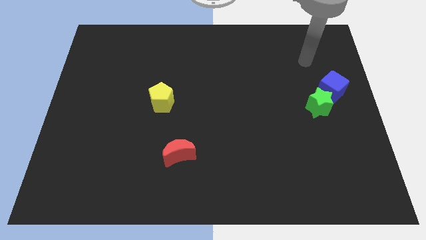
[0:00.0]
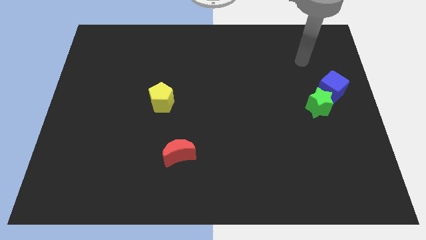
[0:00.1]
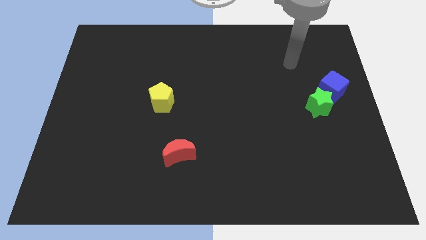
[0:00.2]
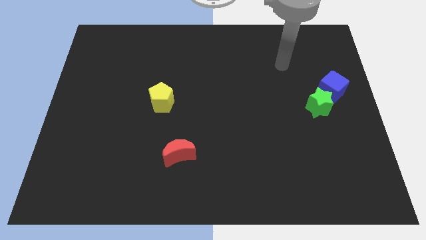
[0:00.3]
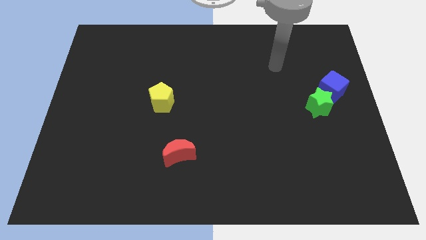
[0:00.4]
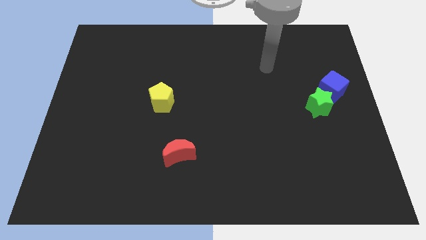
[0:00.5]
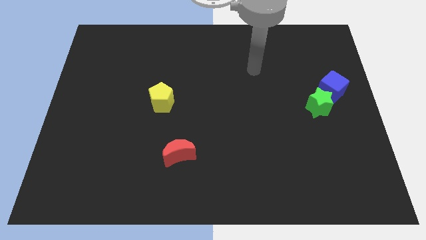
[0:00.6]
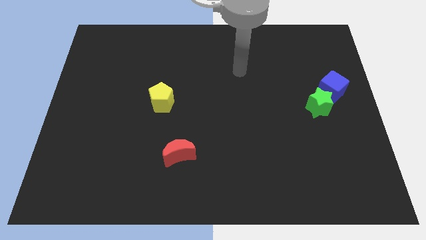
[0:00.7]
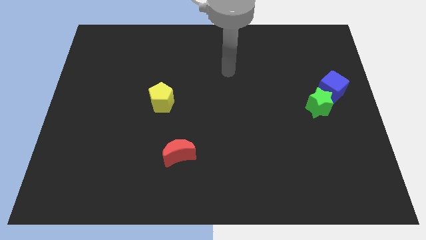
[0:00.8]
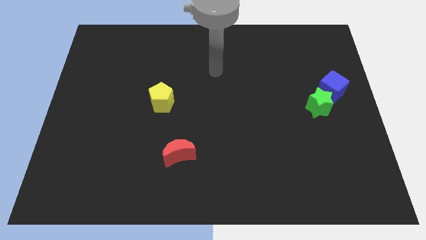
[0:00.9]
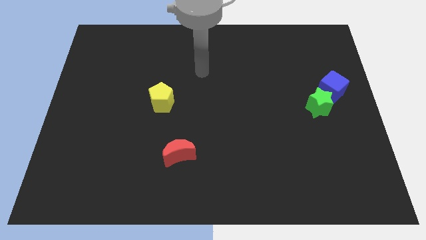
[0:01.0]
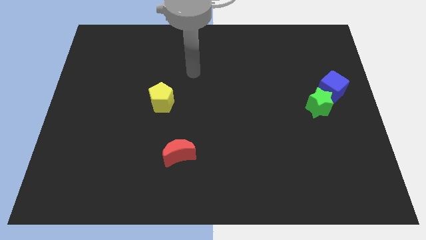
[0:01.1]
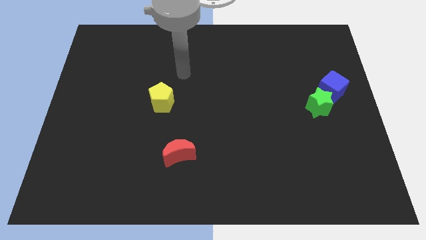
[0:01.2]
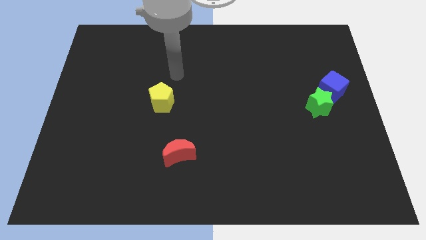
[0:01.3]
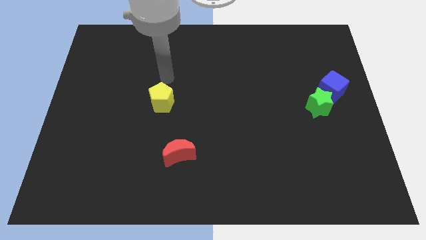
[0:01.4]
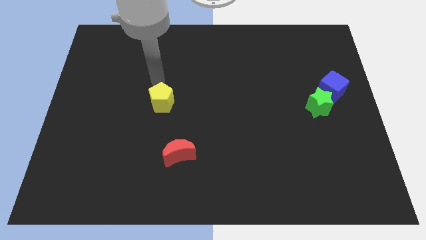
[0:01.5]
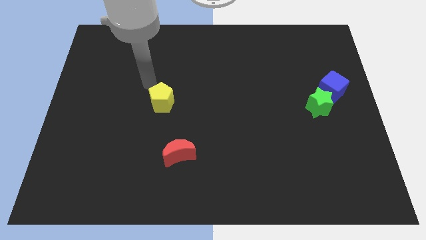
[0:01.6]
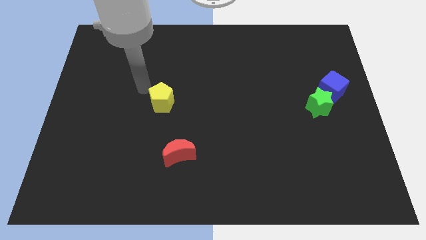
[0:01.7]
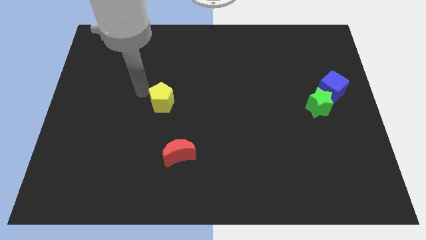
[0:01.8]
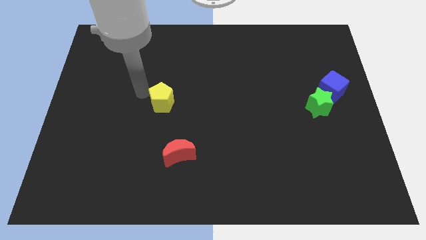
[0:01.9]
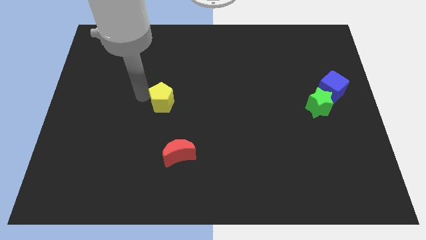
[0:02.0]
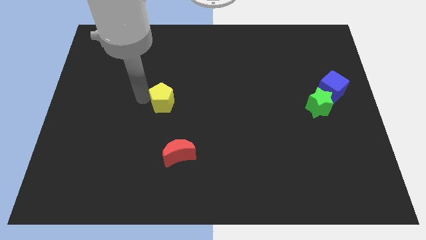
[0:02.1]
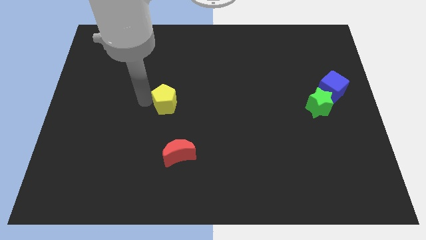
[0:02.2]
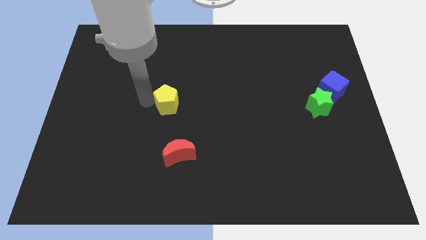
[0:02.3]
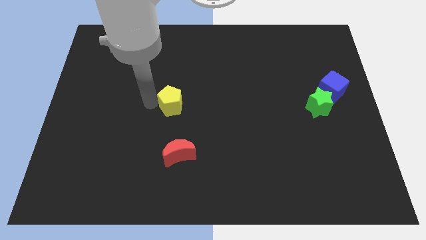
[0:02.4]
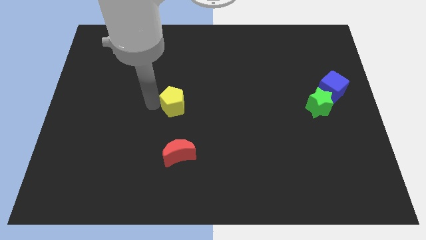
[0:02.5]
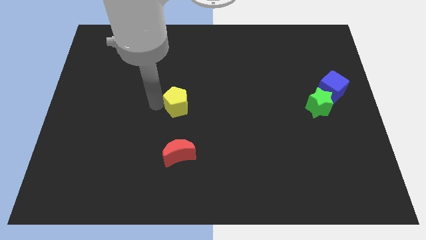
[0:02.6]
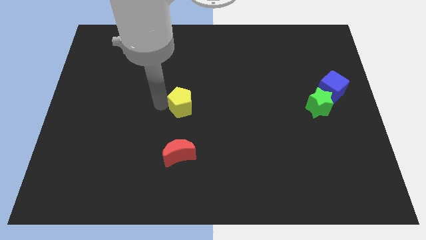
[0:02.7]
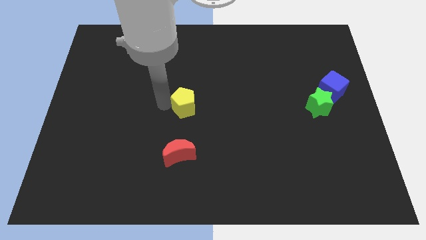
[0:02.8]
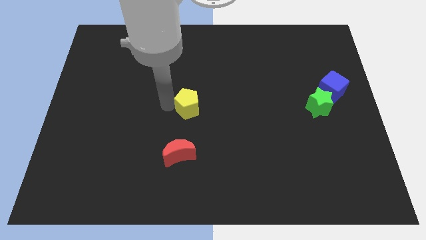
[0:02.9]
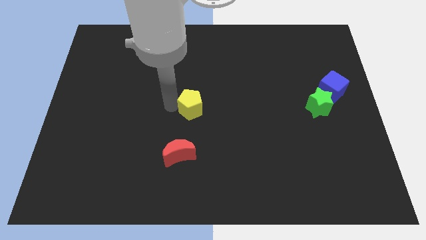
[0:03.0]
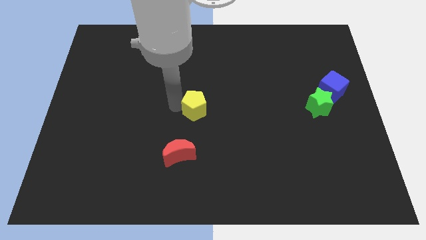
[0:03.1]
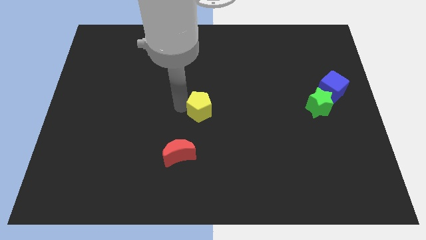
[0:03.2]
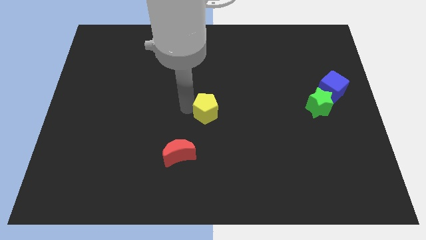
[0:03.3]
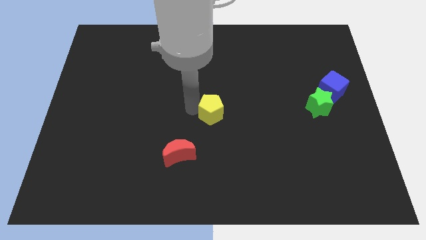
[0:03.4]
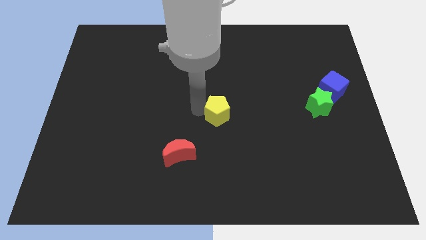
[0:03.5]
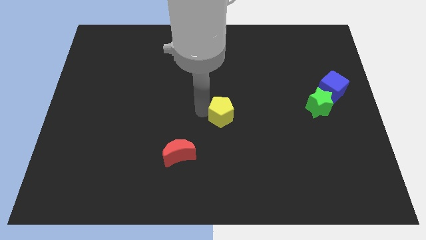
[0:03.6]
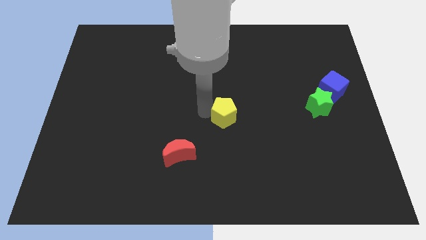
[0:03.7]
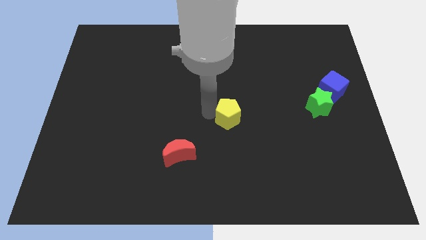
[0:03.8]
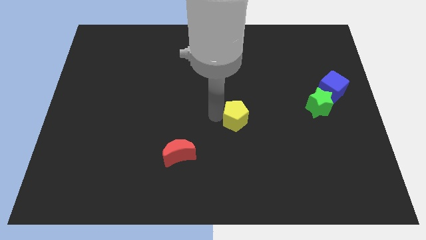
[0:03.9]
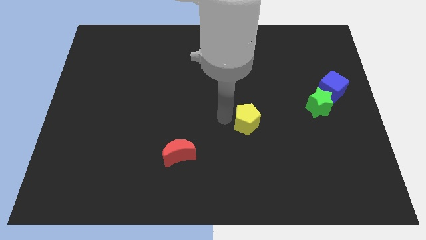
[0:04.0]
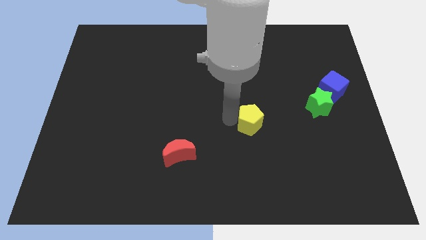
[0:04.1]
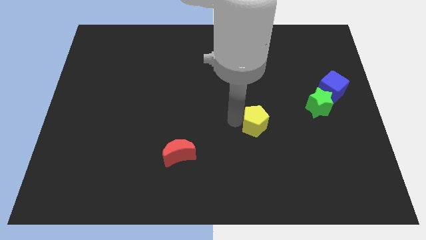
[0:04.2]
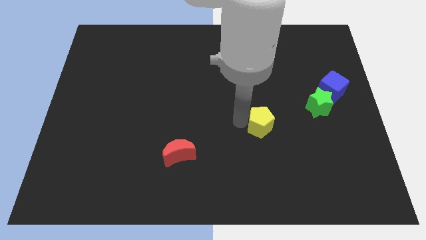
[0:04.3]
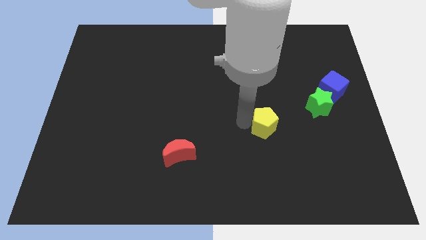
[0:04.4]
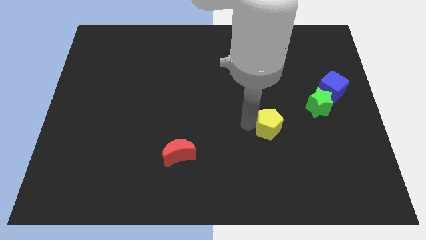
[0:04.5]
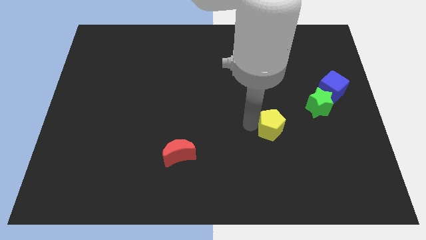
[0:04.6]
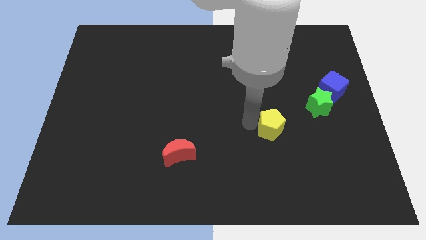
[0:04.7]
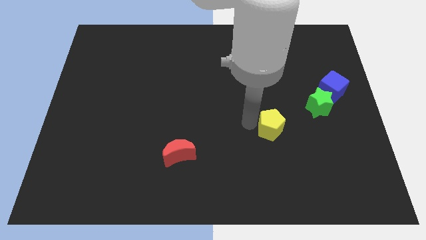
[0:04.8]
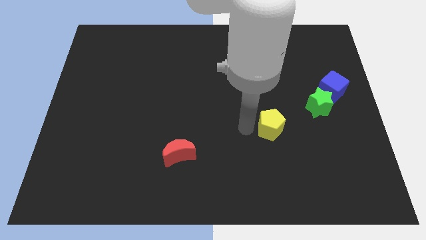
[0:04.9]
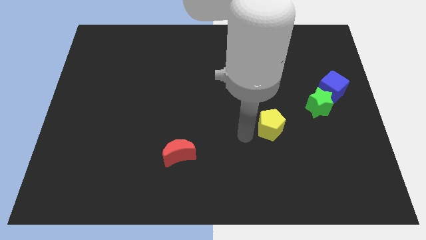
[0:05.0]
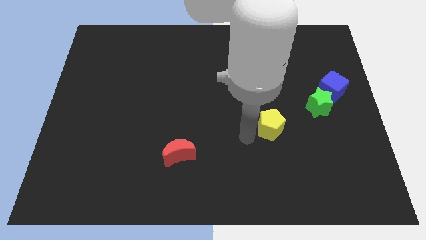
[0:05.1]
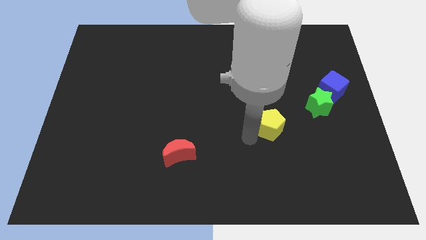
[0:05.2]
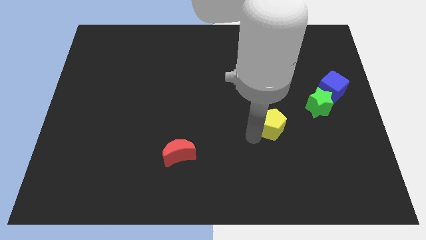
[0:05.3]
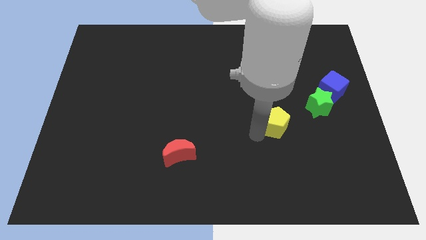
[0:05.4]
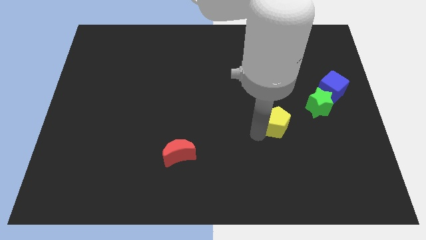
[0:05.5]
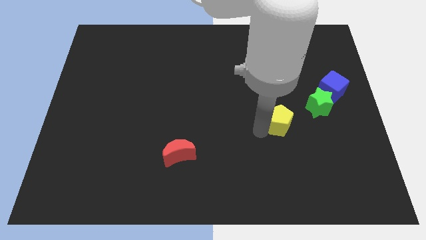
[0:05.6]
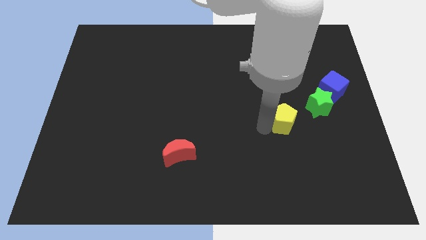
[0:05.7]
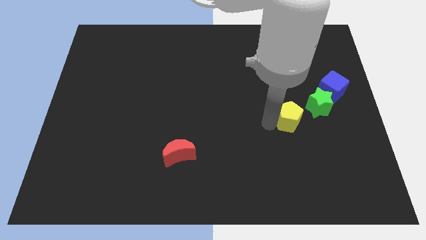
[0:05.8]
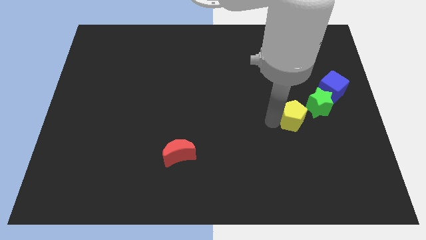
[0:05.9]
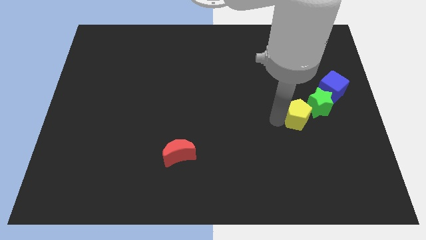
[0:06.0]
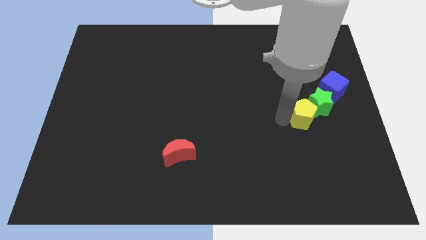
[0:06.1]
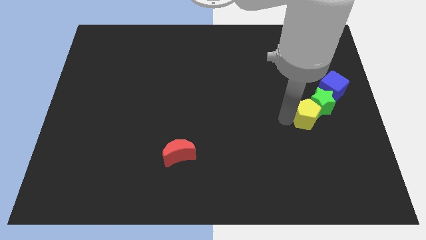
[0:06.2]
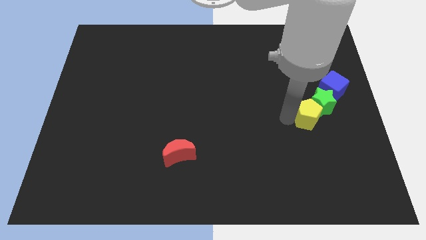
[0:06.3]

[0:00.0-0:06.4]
put the pentagon next to the green star

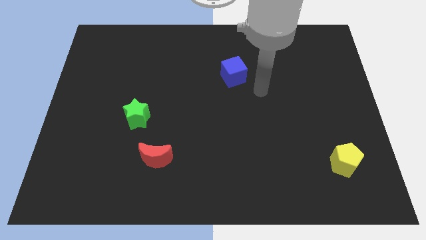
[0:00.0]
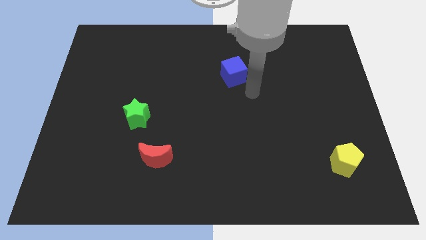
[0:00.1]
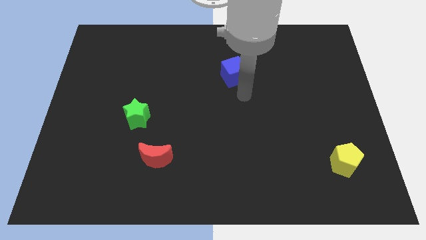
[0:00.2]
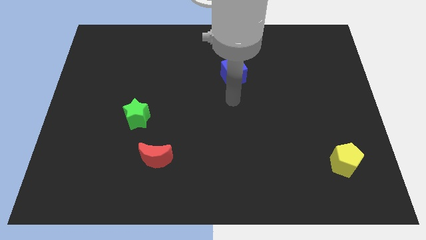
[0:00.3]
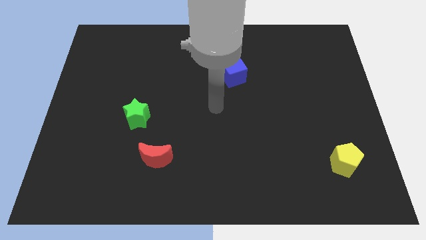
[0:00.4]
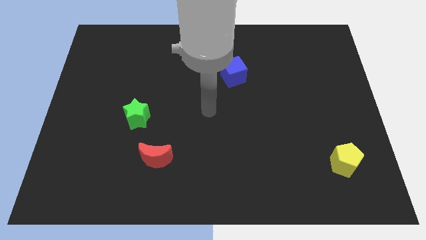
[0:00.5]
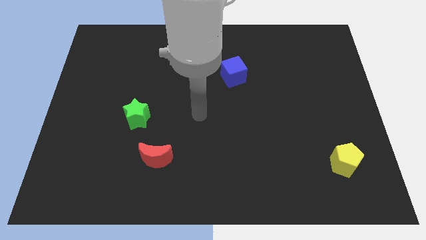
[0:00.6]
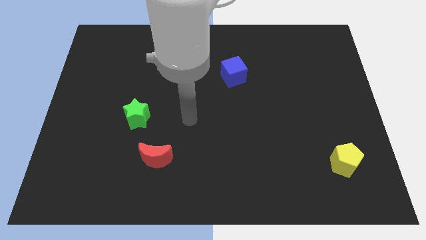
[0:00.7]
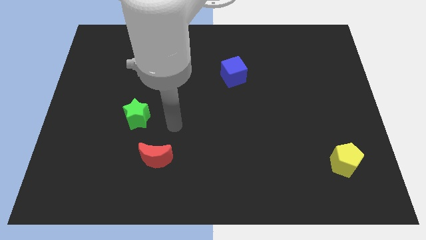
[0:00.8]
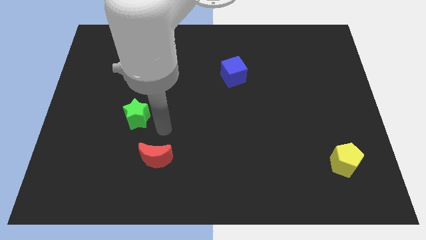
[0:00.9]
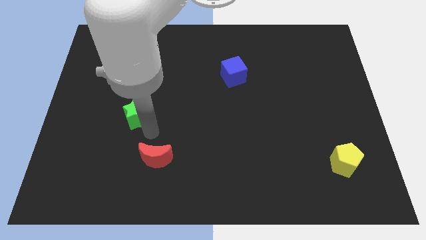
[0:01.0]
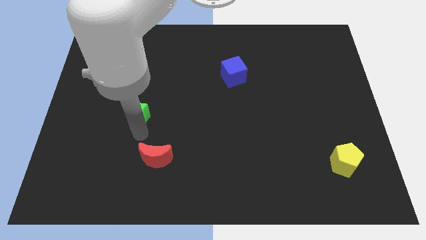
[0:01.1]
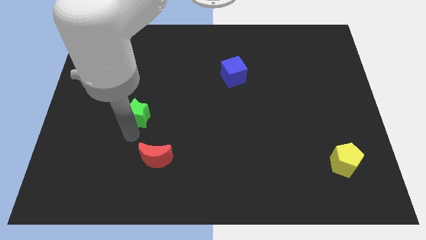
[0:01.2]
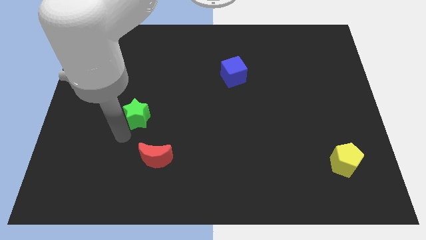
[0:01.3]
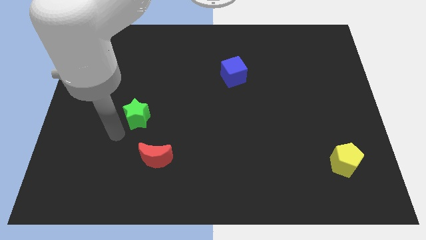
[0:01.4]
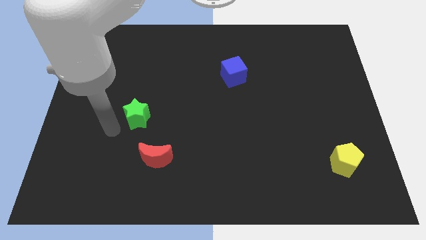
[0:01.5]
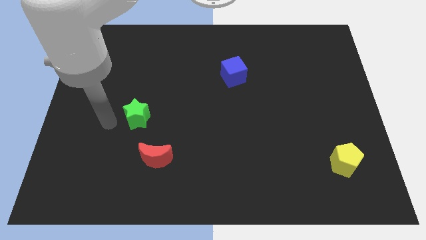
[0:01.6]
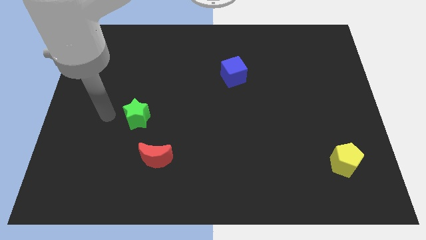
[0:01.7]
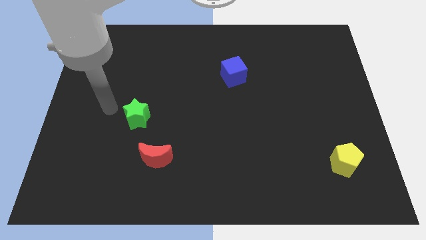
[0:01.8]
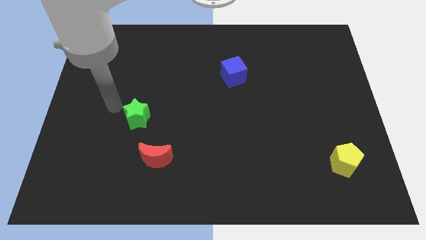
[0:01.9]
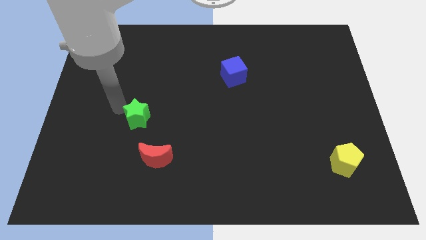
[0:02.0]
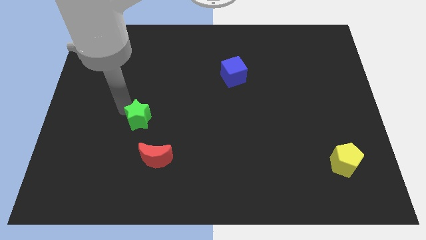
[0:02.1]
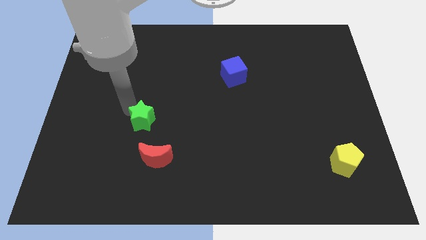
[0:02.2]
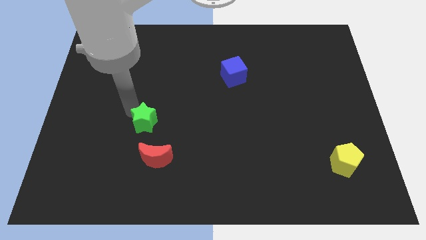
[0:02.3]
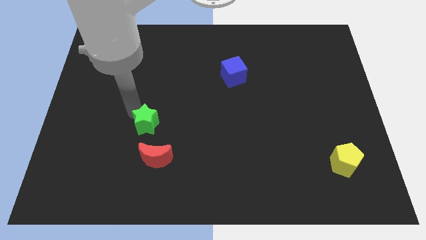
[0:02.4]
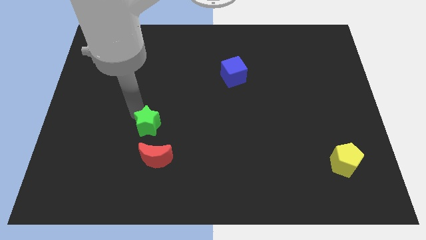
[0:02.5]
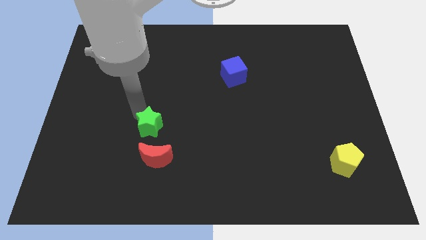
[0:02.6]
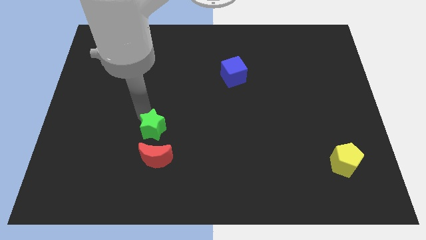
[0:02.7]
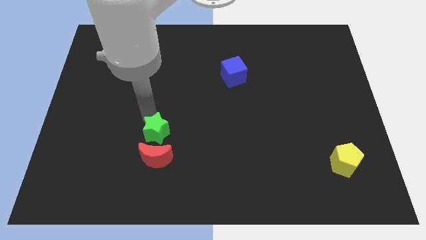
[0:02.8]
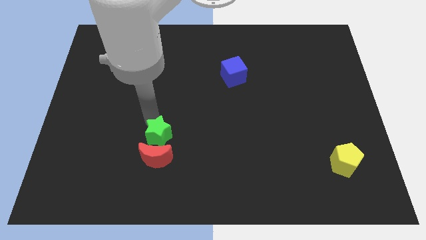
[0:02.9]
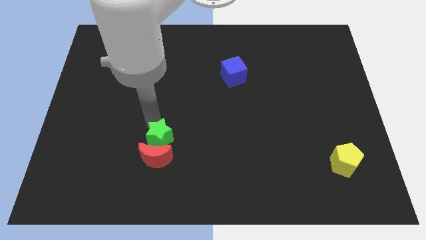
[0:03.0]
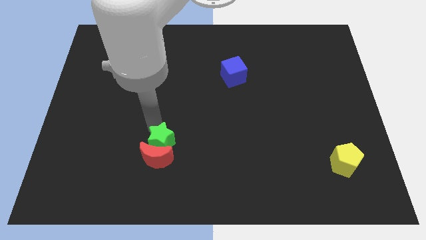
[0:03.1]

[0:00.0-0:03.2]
put the green block towards the moon
